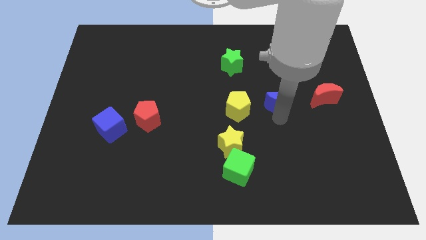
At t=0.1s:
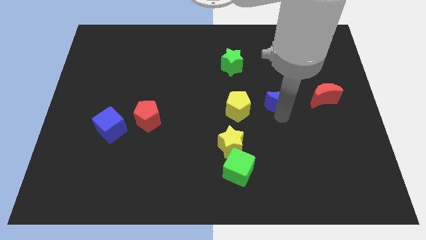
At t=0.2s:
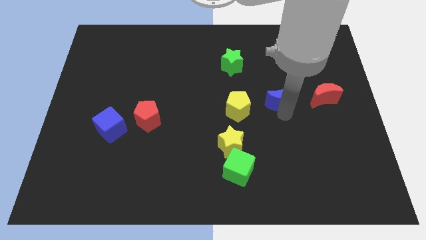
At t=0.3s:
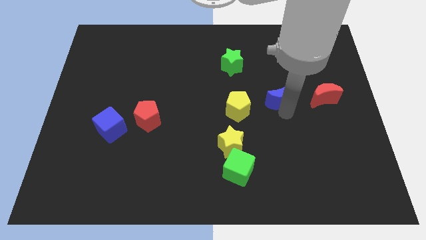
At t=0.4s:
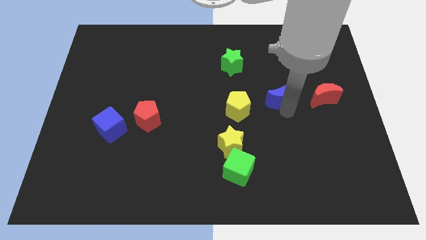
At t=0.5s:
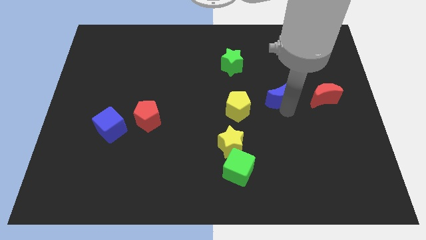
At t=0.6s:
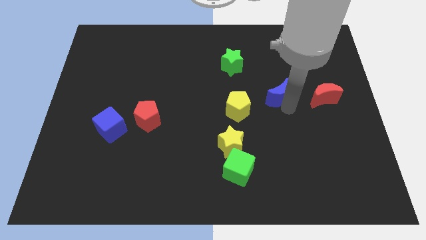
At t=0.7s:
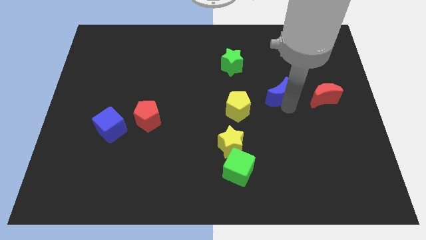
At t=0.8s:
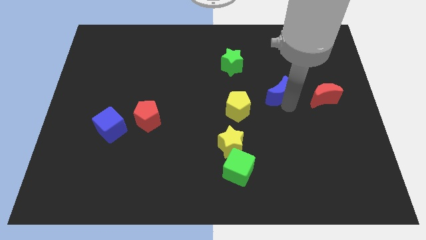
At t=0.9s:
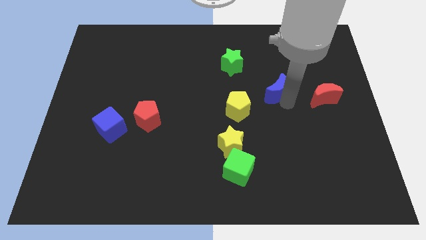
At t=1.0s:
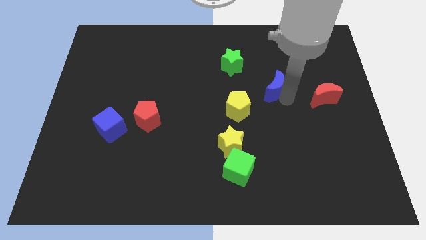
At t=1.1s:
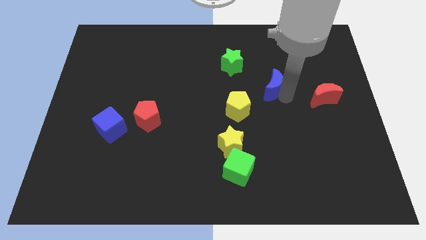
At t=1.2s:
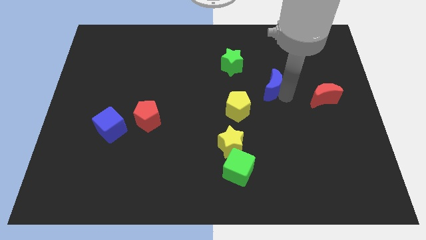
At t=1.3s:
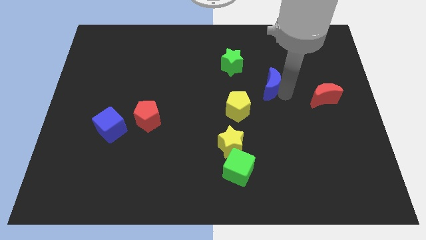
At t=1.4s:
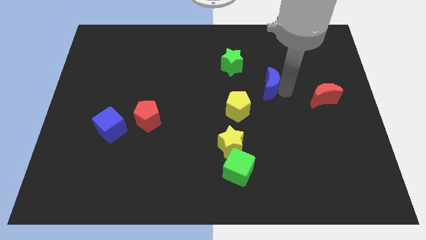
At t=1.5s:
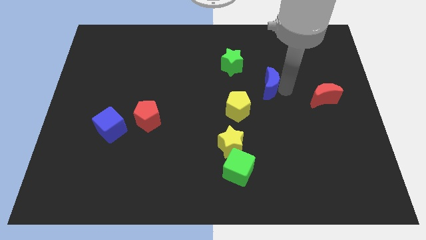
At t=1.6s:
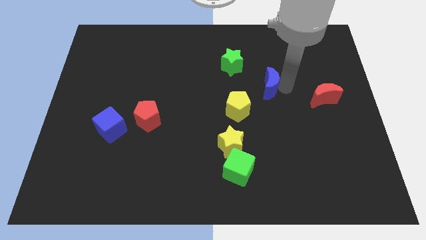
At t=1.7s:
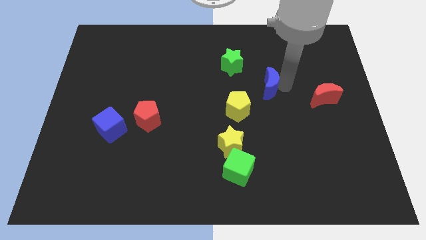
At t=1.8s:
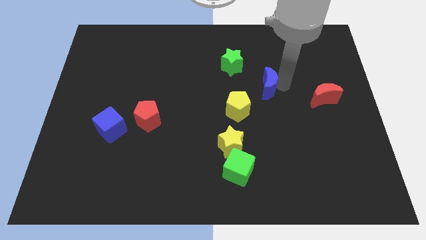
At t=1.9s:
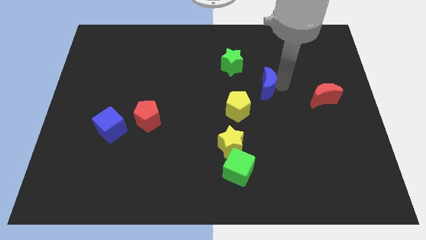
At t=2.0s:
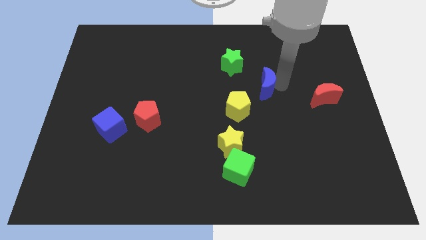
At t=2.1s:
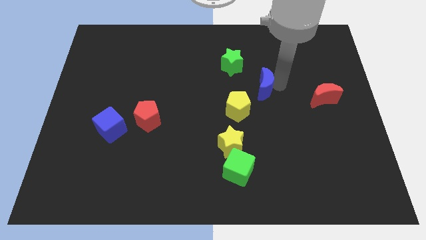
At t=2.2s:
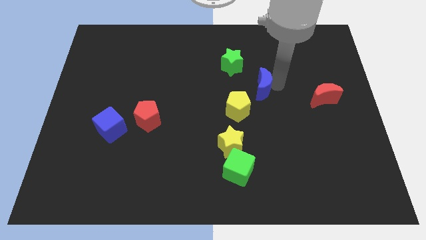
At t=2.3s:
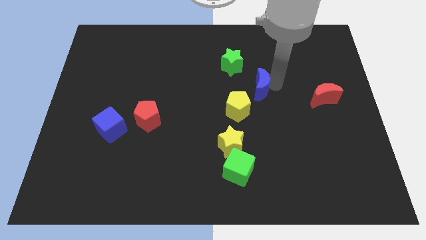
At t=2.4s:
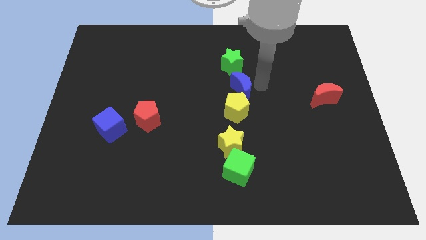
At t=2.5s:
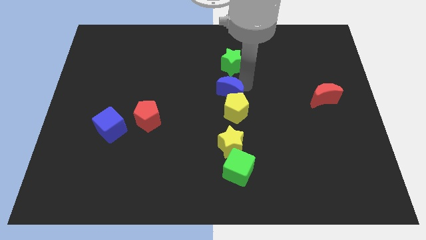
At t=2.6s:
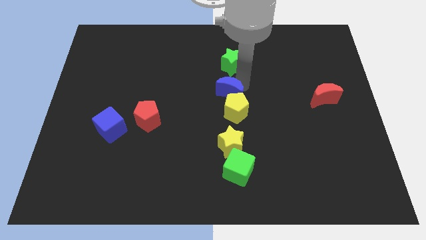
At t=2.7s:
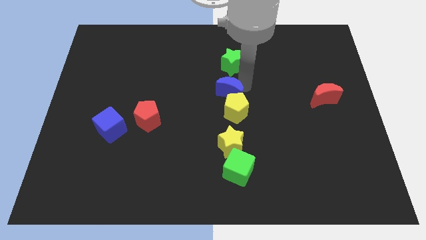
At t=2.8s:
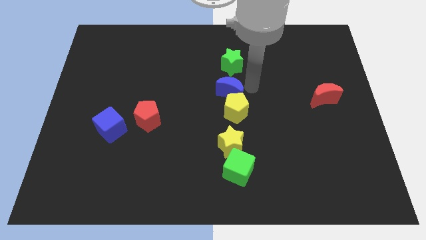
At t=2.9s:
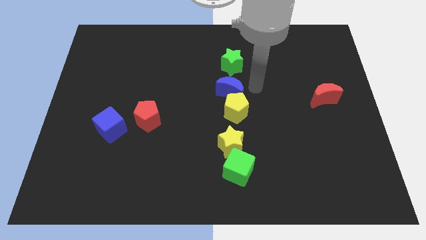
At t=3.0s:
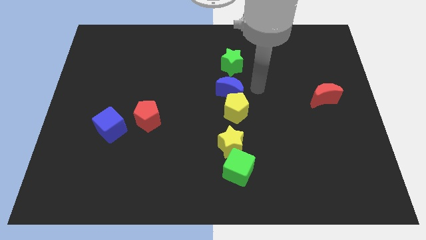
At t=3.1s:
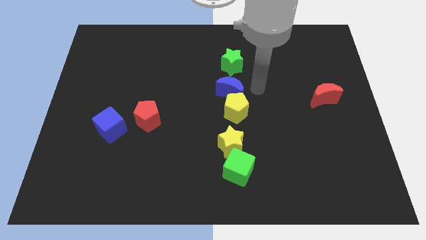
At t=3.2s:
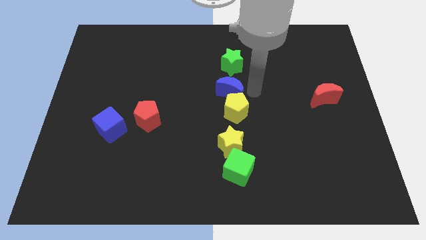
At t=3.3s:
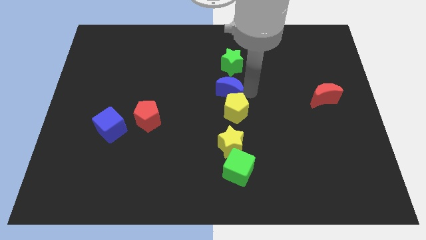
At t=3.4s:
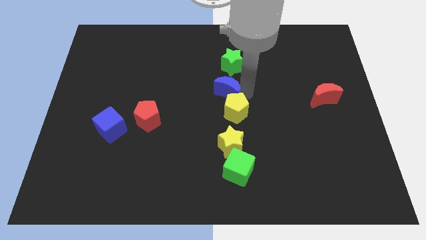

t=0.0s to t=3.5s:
put the blue moon in between the green star and yellow pentagon

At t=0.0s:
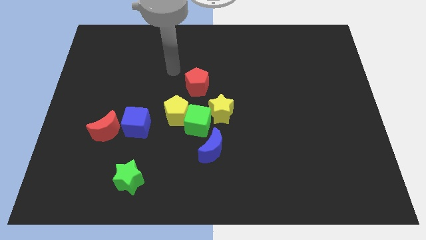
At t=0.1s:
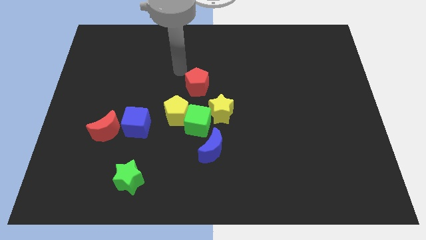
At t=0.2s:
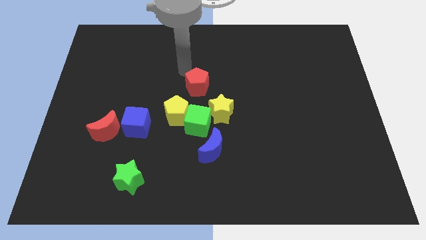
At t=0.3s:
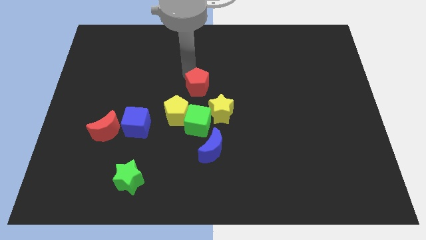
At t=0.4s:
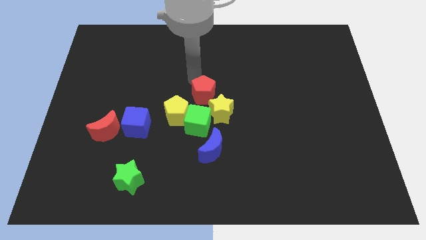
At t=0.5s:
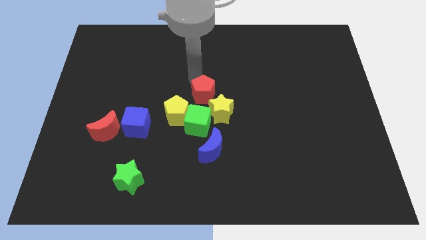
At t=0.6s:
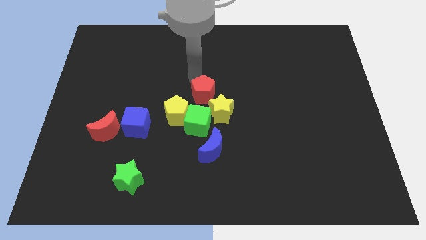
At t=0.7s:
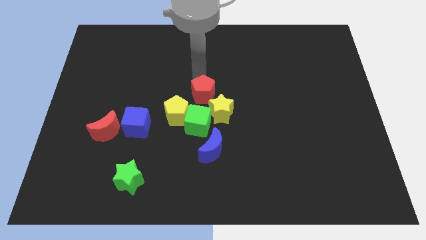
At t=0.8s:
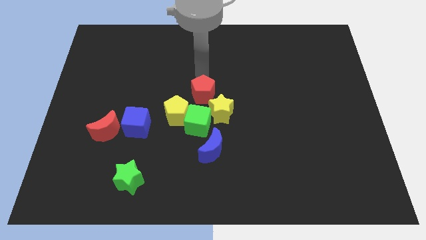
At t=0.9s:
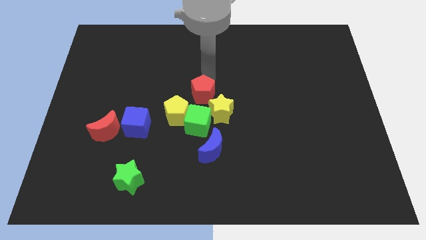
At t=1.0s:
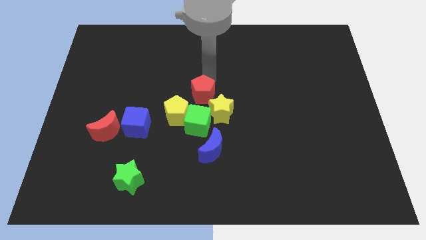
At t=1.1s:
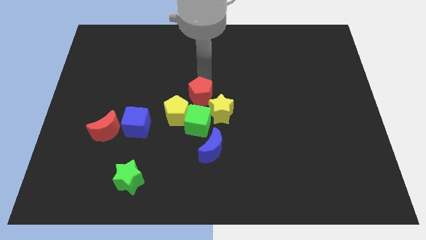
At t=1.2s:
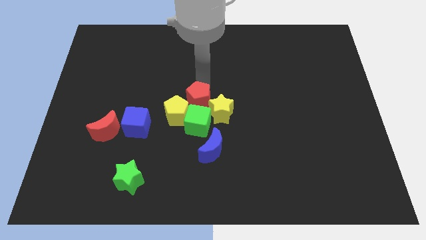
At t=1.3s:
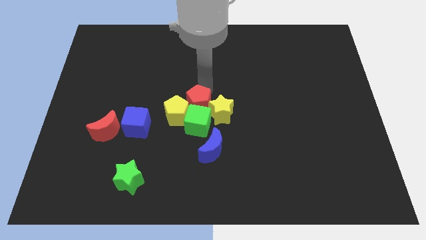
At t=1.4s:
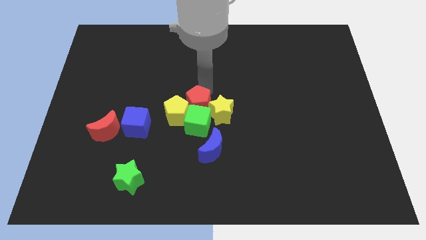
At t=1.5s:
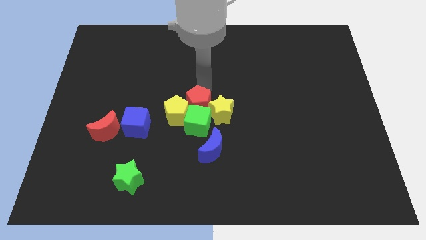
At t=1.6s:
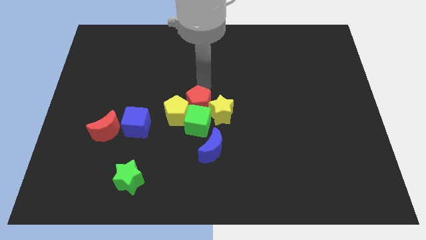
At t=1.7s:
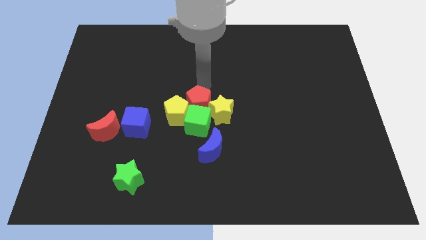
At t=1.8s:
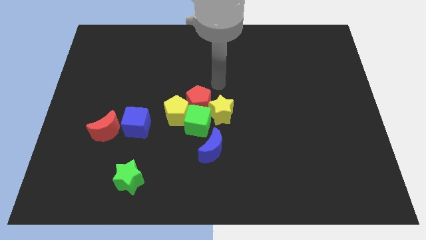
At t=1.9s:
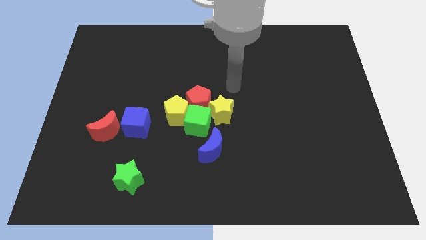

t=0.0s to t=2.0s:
push the red pentagon close to the green cube

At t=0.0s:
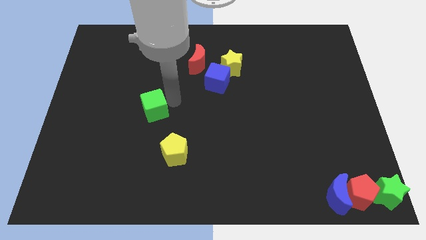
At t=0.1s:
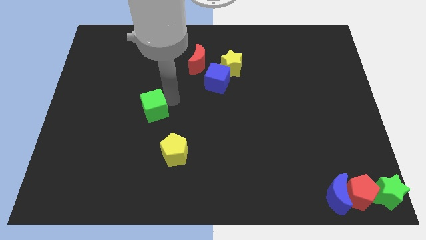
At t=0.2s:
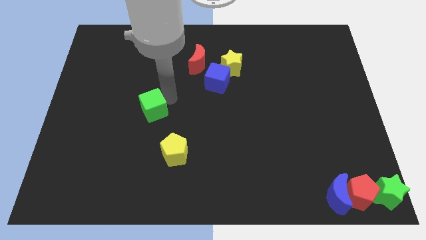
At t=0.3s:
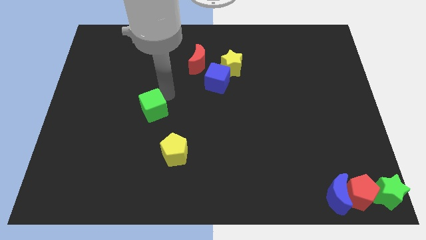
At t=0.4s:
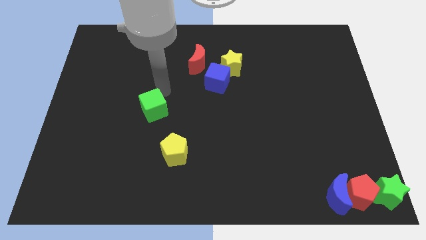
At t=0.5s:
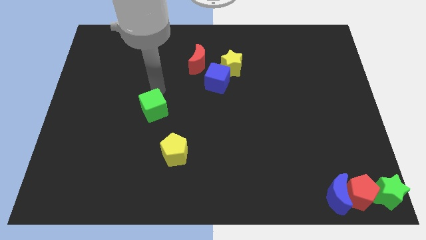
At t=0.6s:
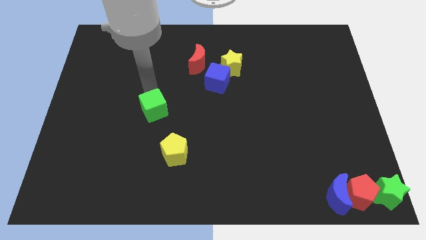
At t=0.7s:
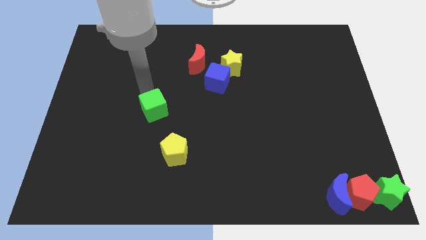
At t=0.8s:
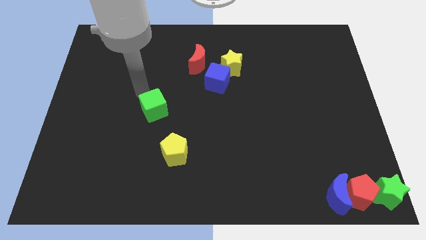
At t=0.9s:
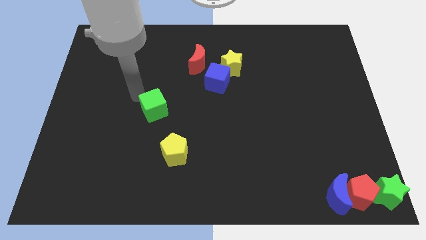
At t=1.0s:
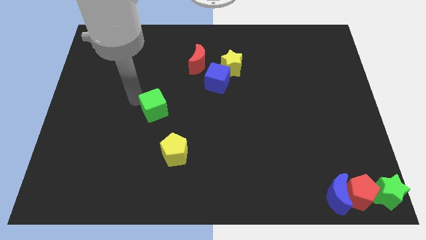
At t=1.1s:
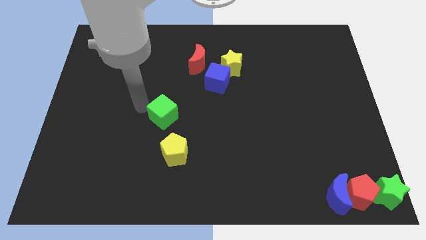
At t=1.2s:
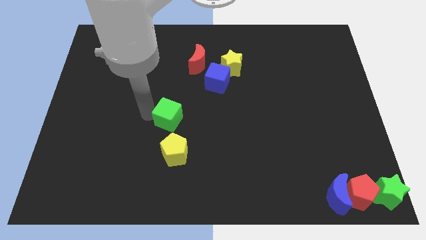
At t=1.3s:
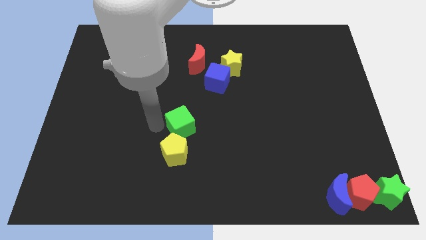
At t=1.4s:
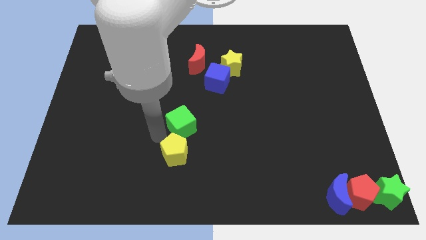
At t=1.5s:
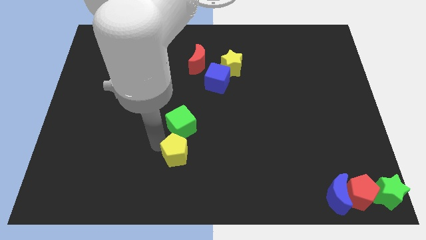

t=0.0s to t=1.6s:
push the green cube into the yellow pentagon

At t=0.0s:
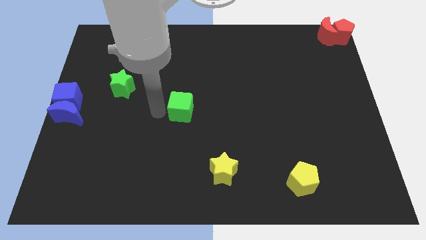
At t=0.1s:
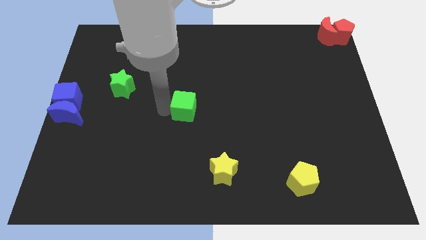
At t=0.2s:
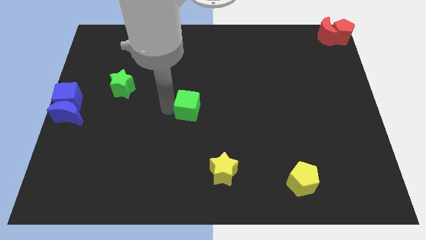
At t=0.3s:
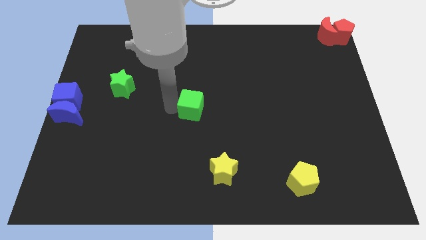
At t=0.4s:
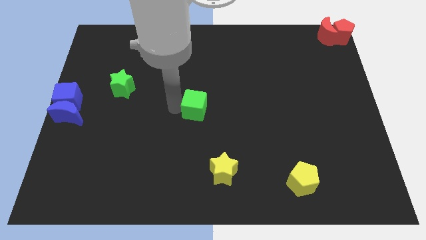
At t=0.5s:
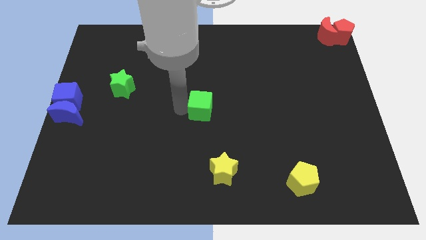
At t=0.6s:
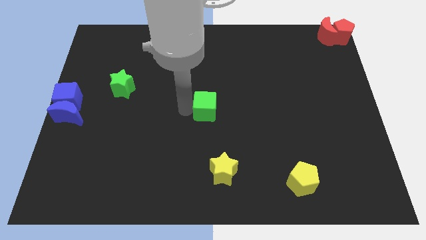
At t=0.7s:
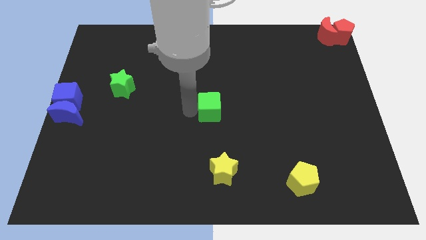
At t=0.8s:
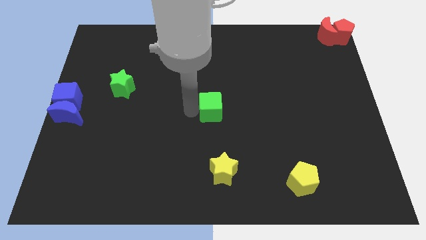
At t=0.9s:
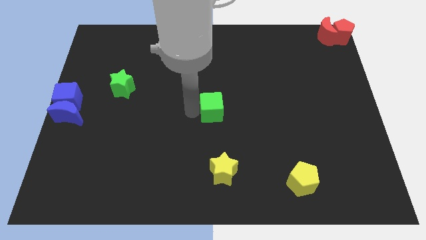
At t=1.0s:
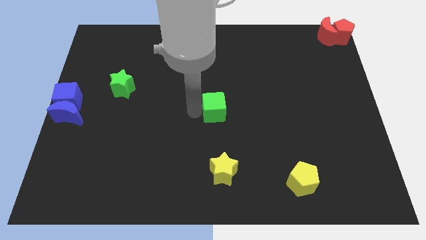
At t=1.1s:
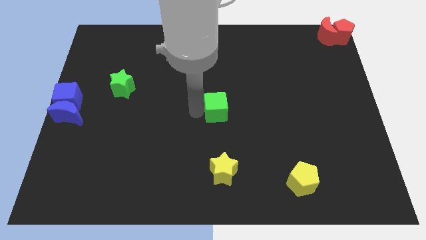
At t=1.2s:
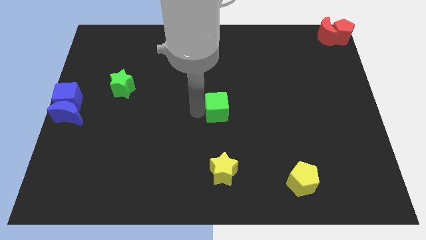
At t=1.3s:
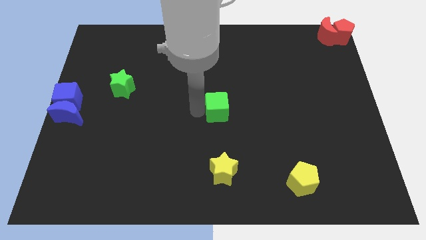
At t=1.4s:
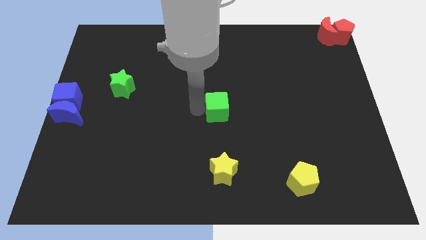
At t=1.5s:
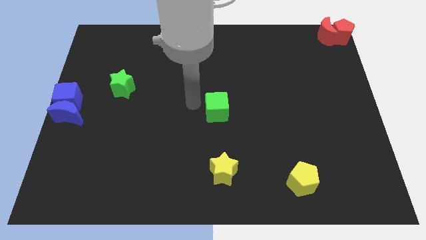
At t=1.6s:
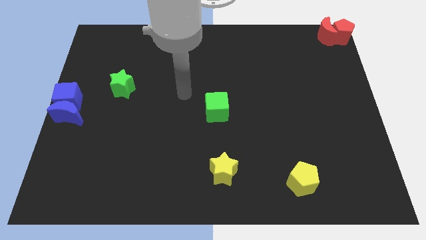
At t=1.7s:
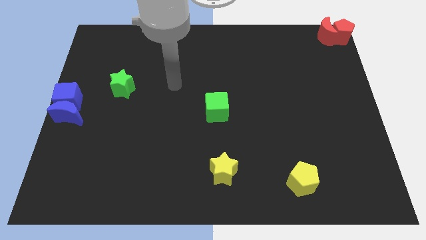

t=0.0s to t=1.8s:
put the green cube vertically above the yellow star
